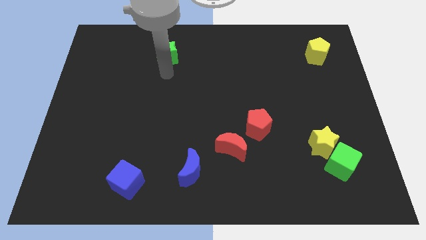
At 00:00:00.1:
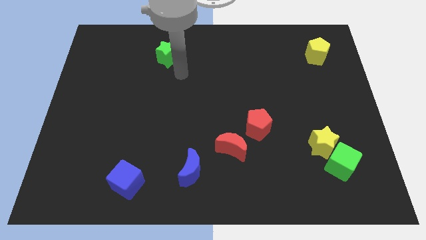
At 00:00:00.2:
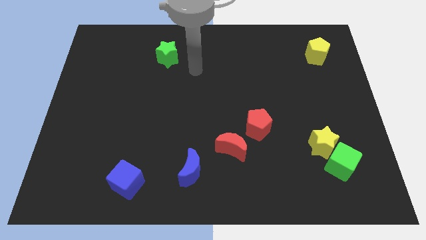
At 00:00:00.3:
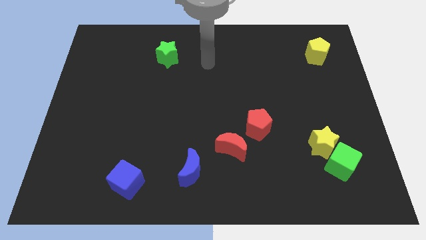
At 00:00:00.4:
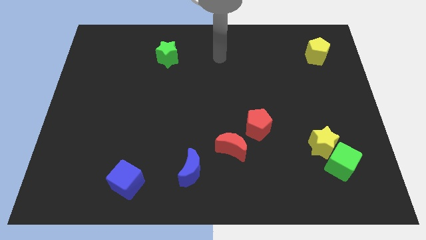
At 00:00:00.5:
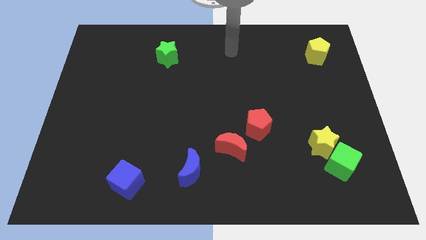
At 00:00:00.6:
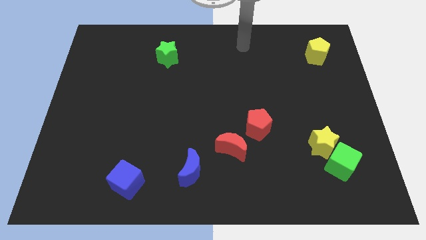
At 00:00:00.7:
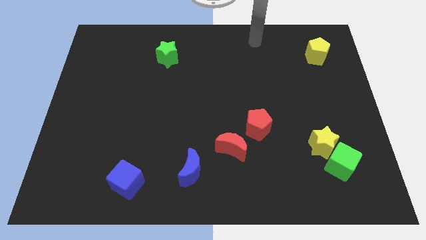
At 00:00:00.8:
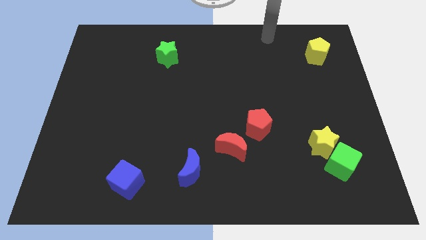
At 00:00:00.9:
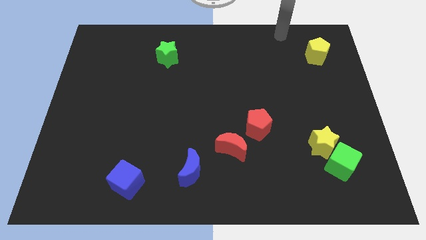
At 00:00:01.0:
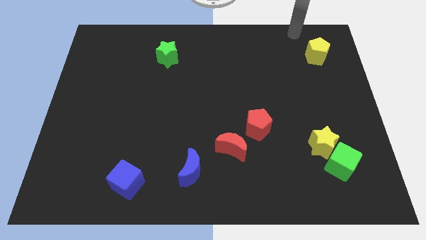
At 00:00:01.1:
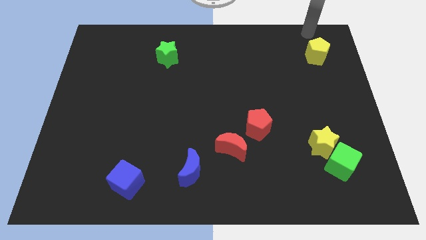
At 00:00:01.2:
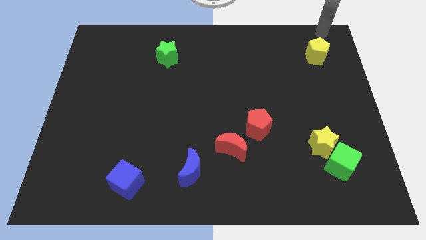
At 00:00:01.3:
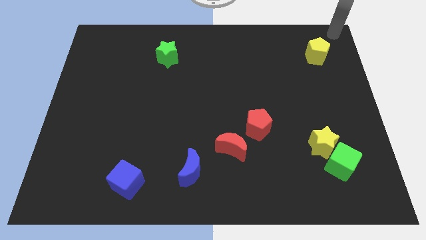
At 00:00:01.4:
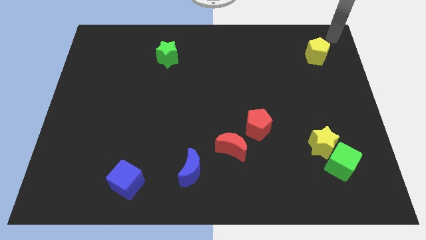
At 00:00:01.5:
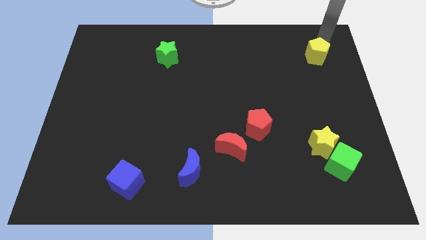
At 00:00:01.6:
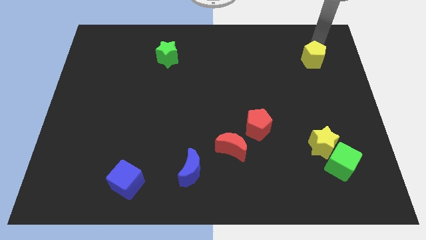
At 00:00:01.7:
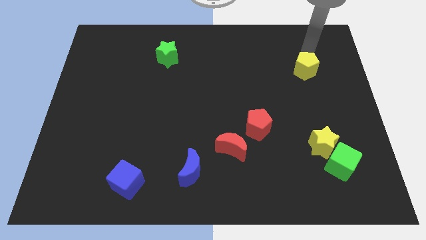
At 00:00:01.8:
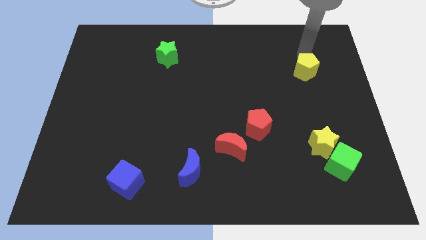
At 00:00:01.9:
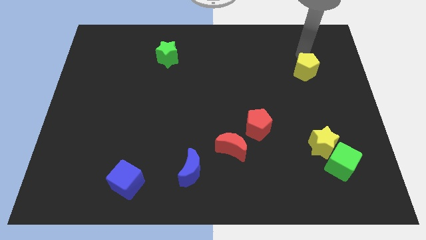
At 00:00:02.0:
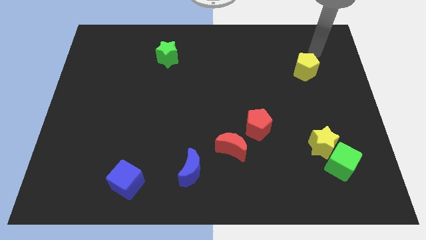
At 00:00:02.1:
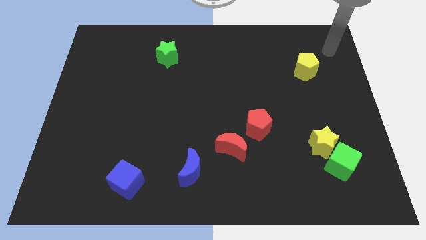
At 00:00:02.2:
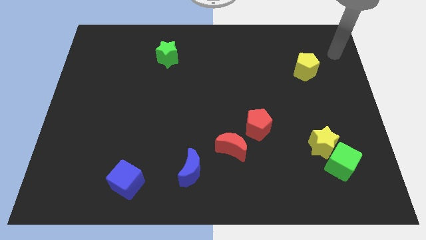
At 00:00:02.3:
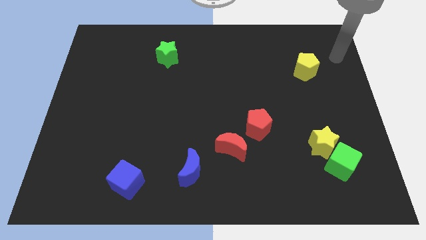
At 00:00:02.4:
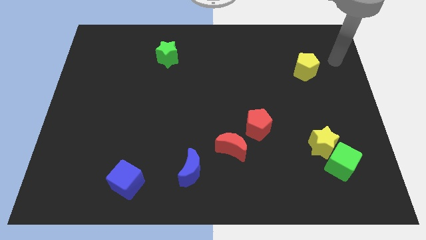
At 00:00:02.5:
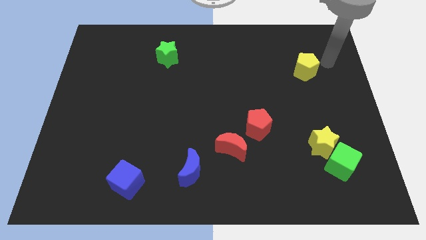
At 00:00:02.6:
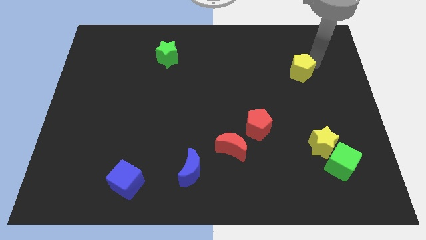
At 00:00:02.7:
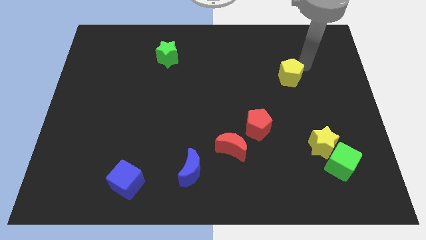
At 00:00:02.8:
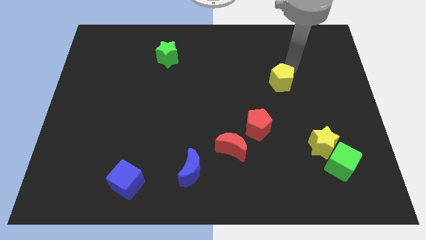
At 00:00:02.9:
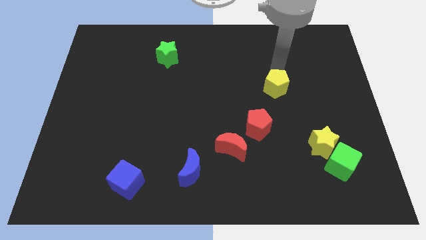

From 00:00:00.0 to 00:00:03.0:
push the yellow pentagon towards the red pentagon

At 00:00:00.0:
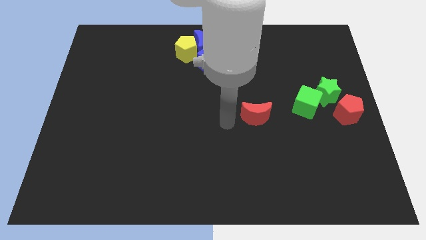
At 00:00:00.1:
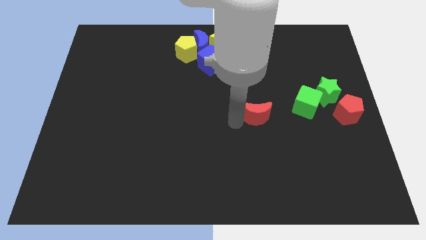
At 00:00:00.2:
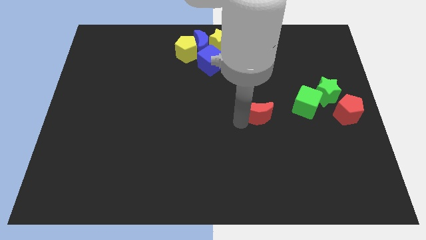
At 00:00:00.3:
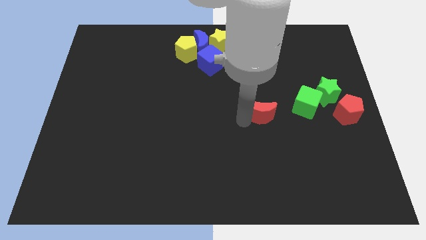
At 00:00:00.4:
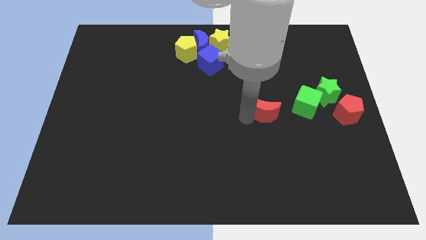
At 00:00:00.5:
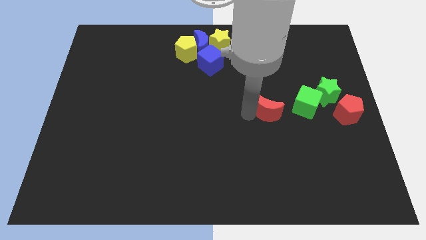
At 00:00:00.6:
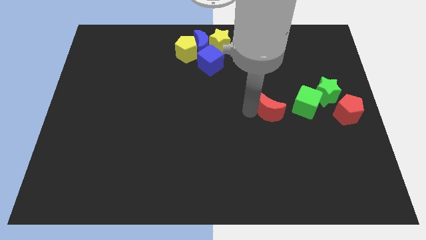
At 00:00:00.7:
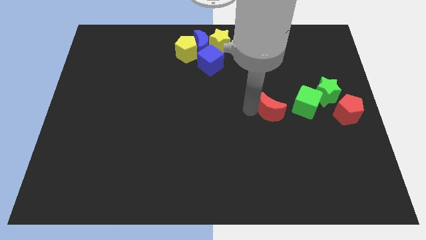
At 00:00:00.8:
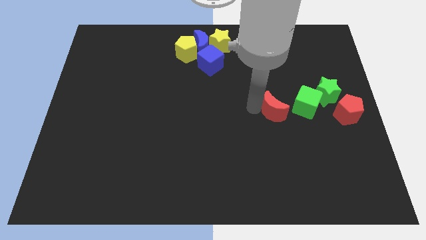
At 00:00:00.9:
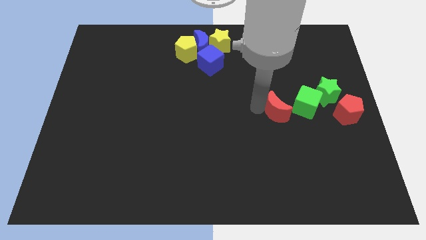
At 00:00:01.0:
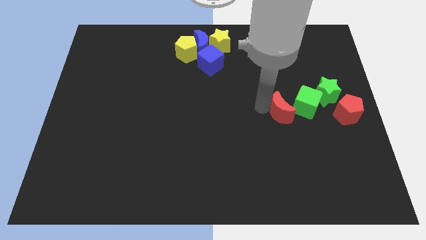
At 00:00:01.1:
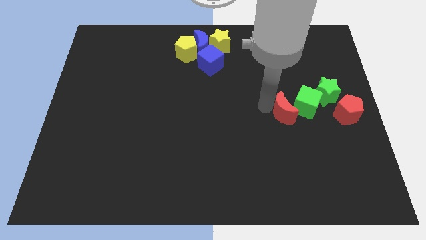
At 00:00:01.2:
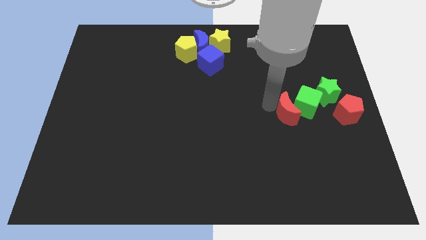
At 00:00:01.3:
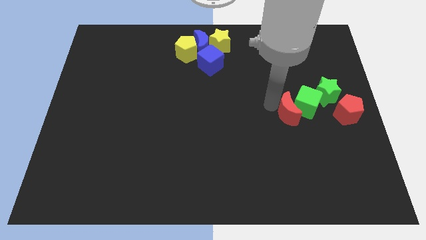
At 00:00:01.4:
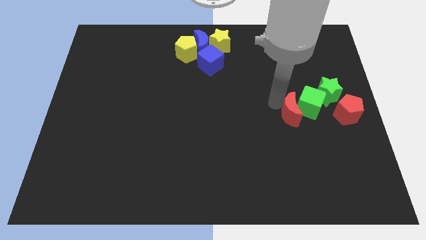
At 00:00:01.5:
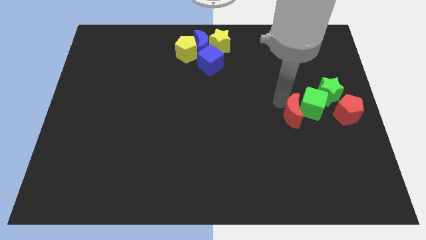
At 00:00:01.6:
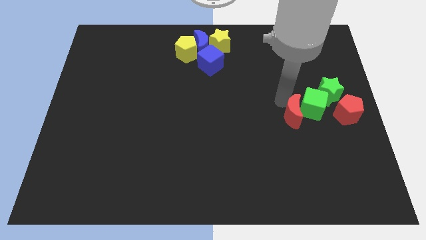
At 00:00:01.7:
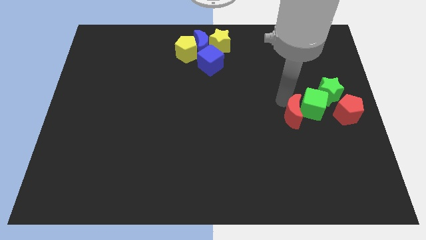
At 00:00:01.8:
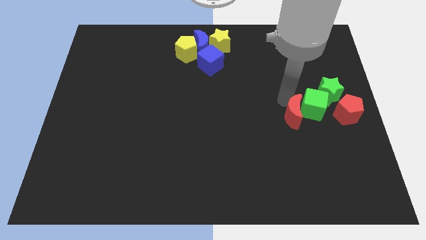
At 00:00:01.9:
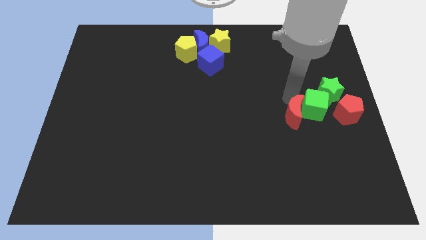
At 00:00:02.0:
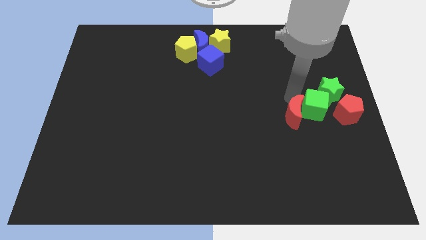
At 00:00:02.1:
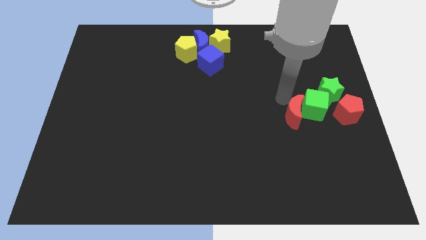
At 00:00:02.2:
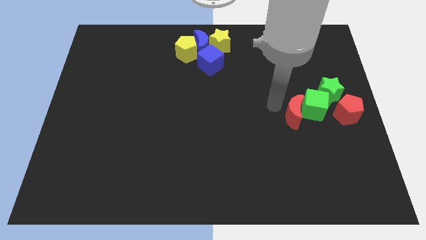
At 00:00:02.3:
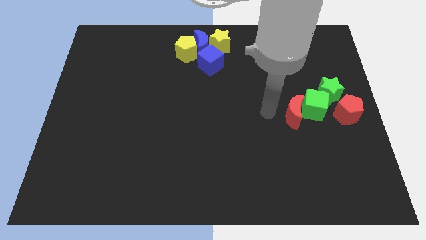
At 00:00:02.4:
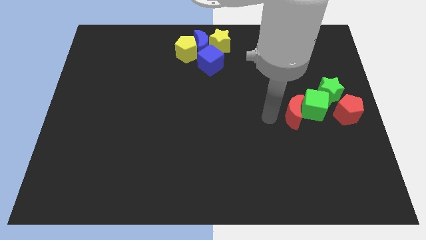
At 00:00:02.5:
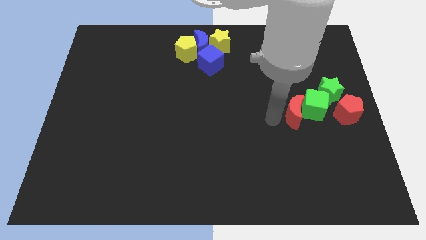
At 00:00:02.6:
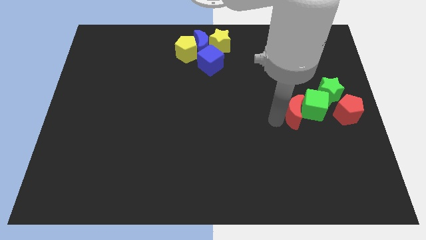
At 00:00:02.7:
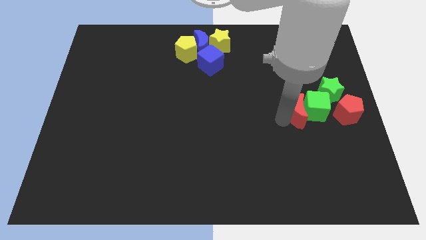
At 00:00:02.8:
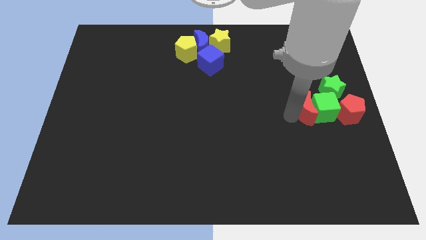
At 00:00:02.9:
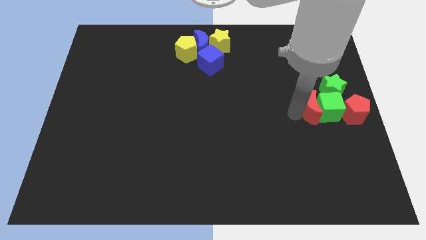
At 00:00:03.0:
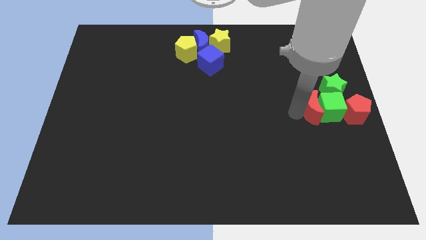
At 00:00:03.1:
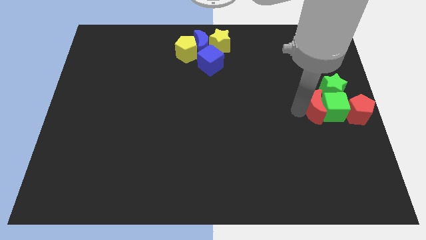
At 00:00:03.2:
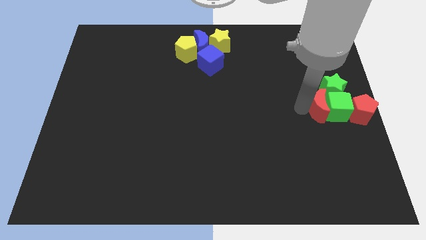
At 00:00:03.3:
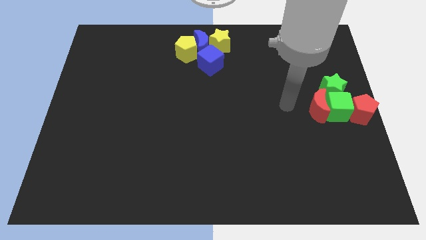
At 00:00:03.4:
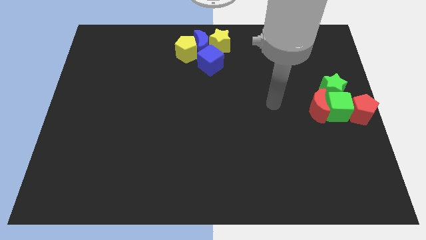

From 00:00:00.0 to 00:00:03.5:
push the red crescent into the green cube

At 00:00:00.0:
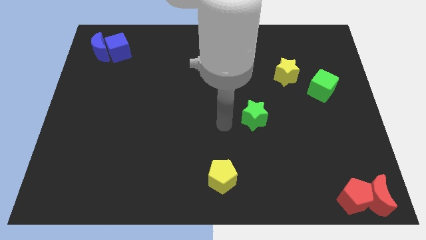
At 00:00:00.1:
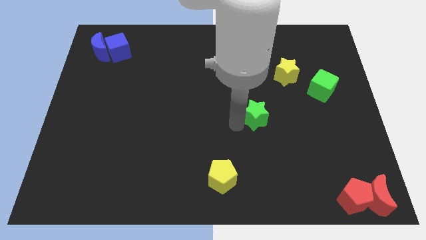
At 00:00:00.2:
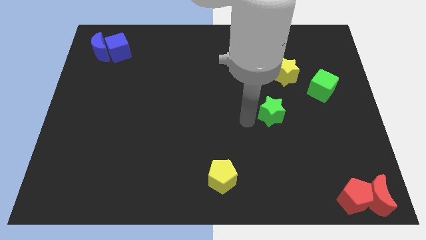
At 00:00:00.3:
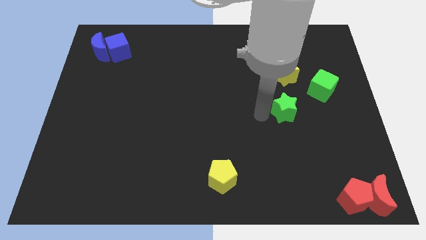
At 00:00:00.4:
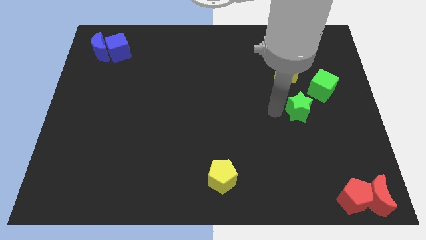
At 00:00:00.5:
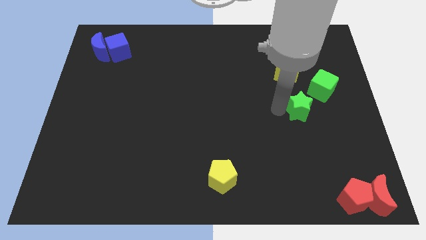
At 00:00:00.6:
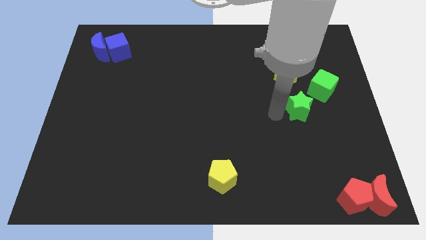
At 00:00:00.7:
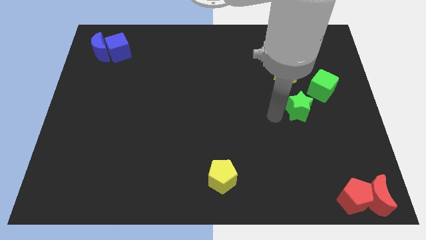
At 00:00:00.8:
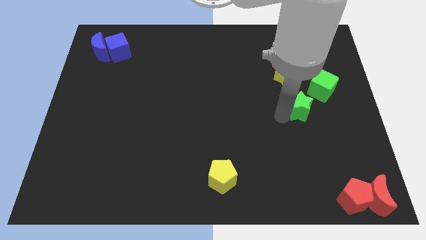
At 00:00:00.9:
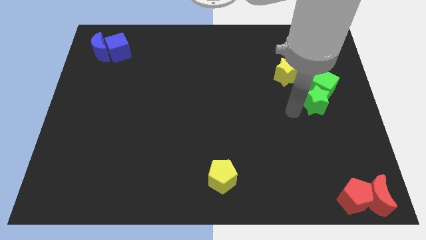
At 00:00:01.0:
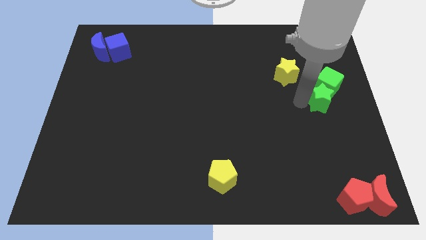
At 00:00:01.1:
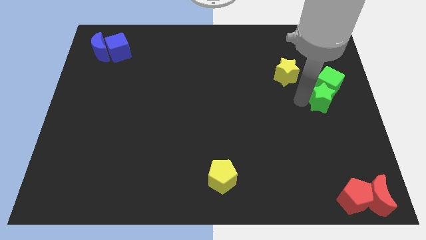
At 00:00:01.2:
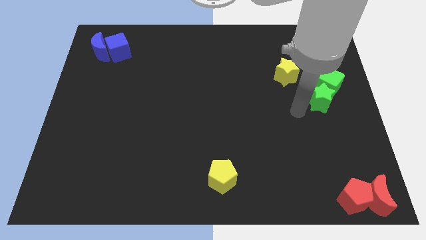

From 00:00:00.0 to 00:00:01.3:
slide the green star into the green cube

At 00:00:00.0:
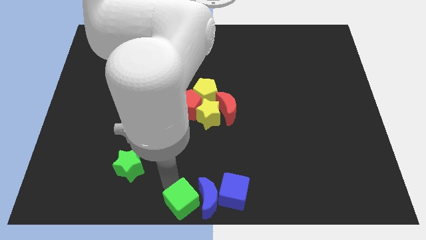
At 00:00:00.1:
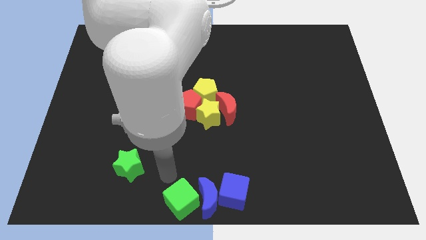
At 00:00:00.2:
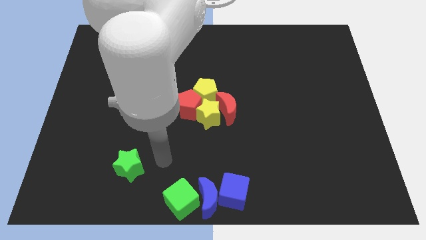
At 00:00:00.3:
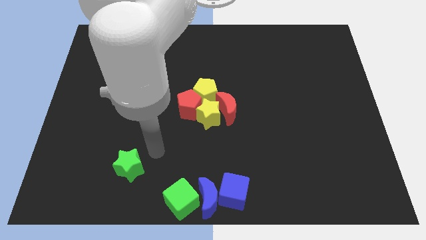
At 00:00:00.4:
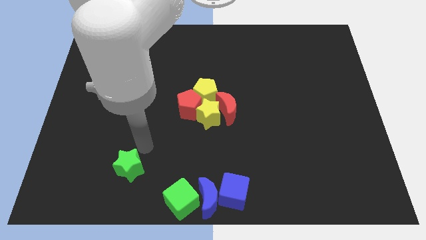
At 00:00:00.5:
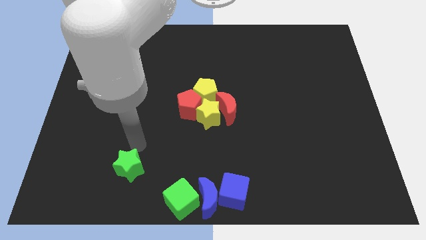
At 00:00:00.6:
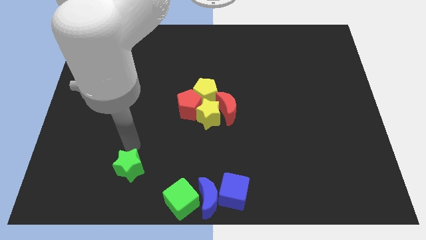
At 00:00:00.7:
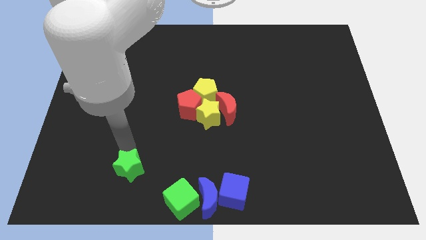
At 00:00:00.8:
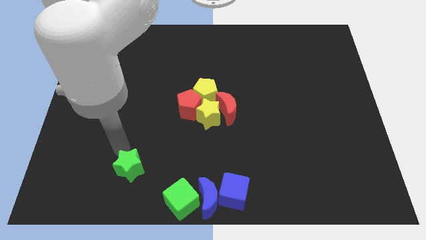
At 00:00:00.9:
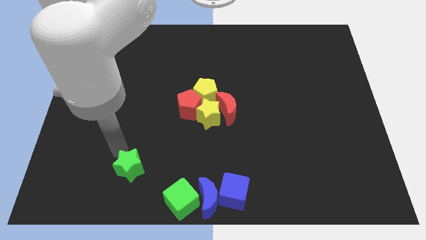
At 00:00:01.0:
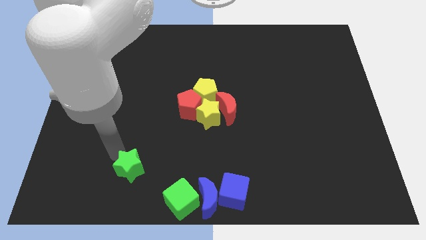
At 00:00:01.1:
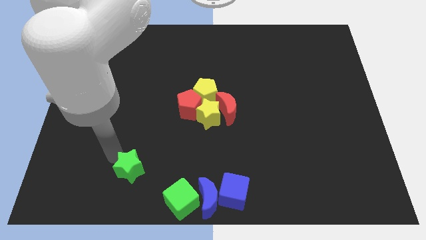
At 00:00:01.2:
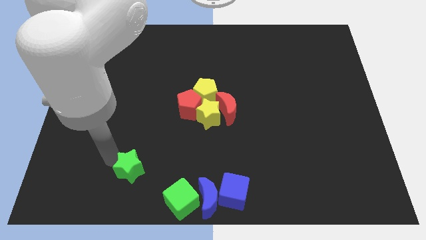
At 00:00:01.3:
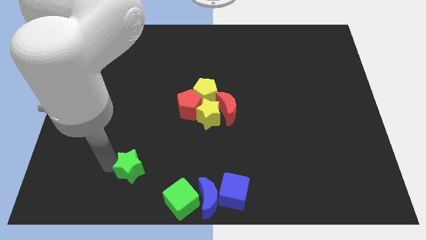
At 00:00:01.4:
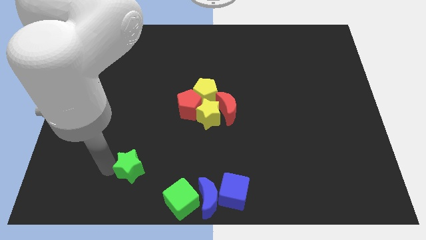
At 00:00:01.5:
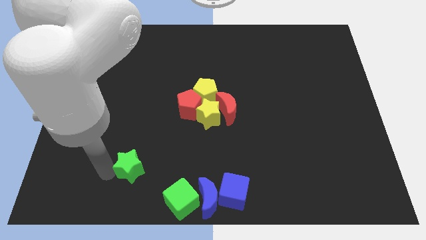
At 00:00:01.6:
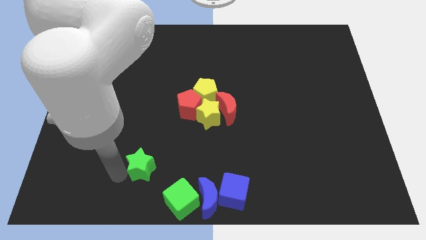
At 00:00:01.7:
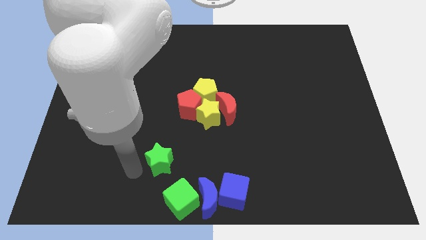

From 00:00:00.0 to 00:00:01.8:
move arm to the green star
